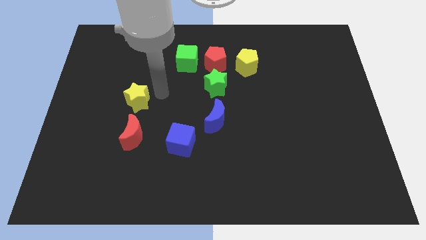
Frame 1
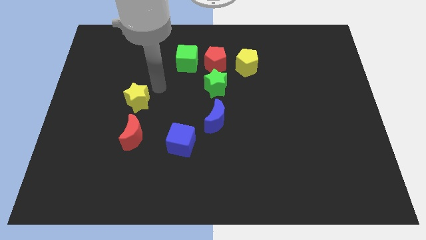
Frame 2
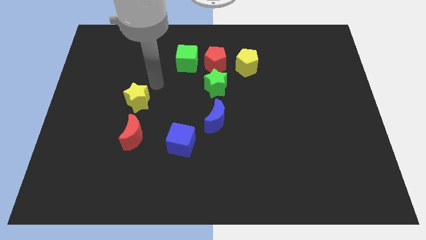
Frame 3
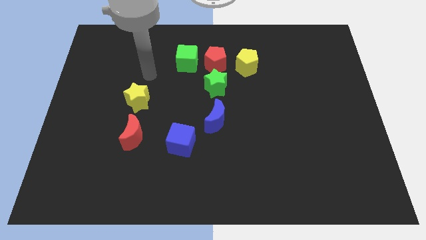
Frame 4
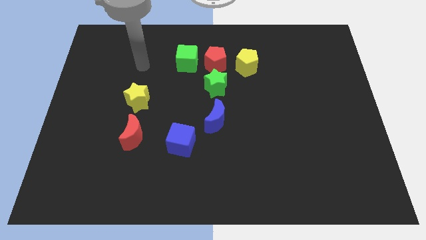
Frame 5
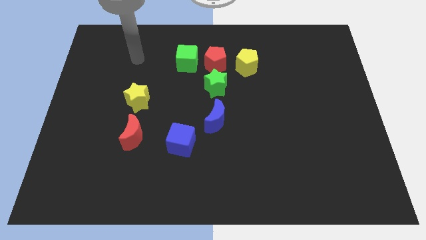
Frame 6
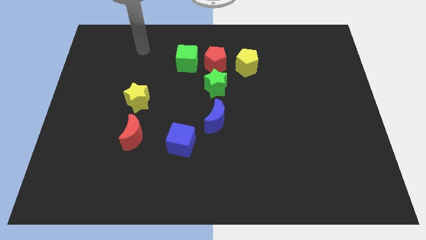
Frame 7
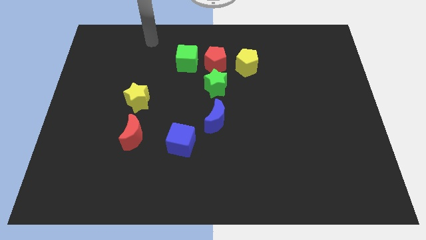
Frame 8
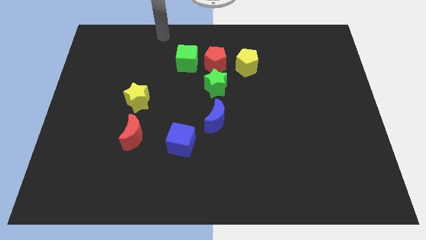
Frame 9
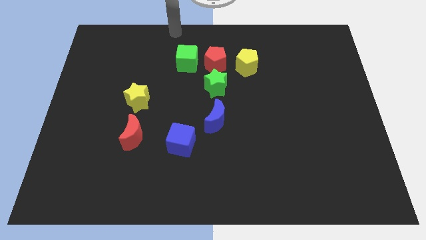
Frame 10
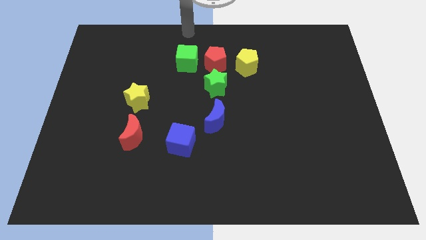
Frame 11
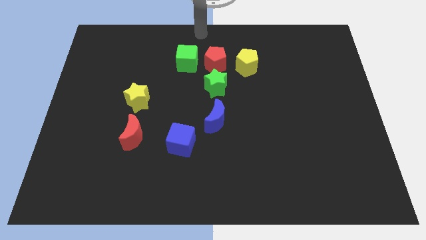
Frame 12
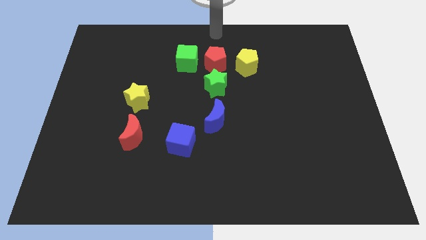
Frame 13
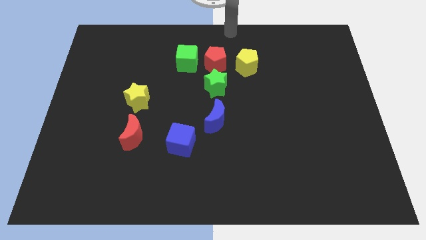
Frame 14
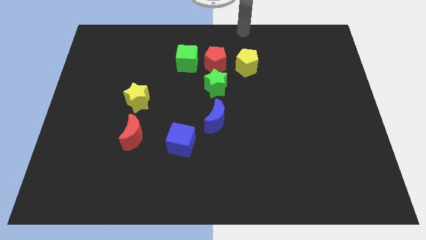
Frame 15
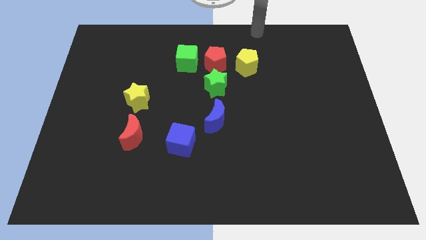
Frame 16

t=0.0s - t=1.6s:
move your arm to the top of yellow pentagon

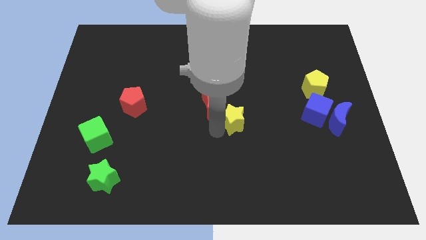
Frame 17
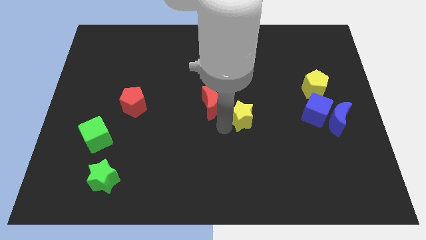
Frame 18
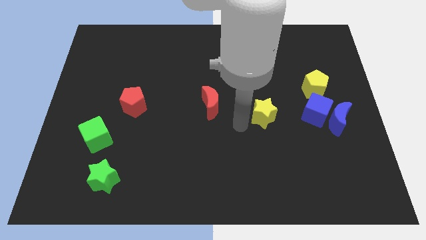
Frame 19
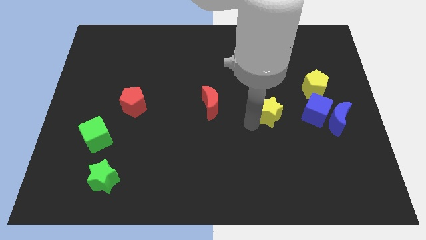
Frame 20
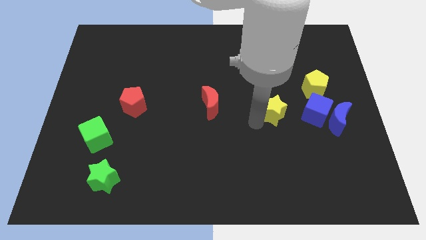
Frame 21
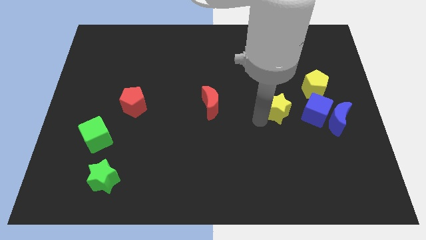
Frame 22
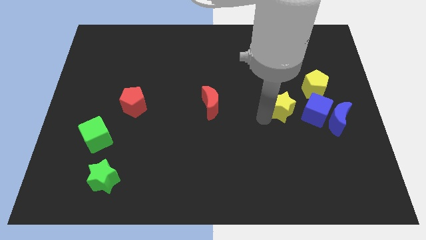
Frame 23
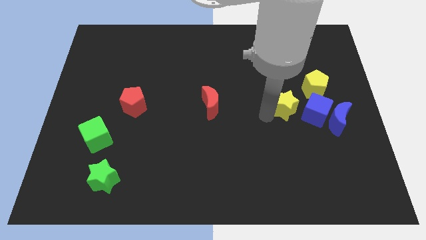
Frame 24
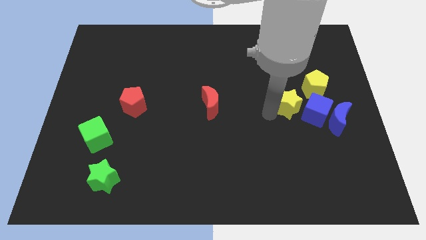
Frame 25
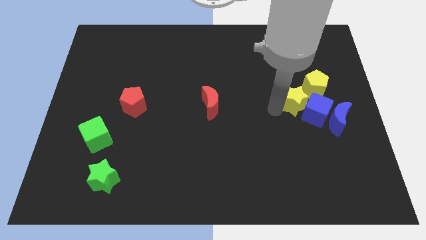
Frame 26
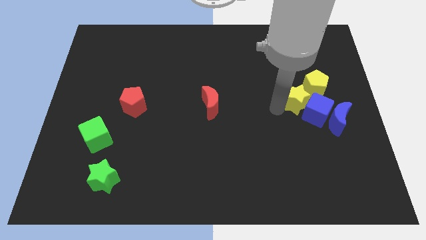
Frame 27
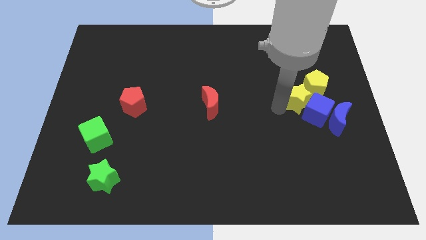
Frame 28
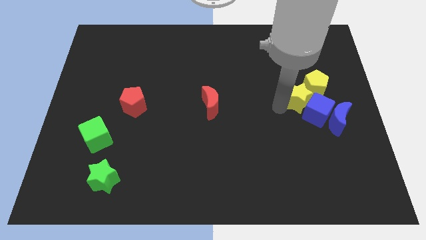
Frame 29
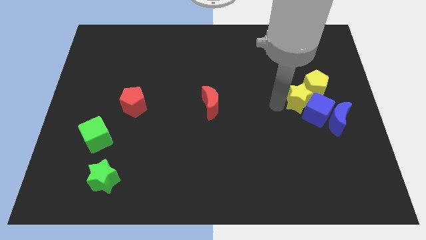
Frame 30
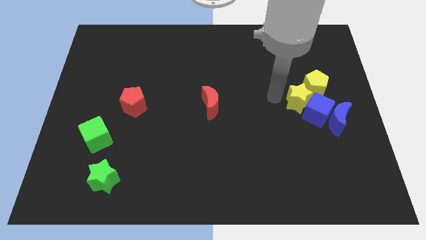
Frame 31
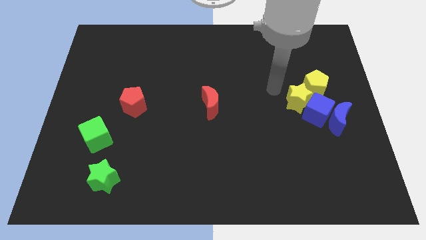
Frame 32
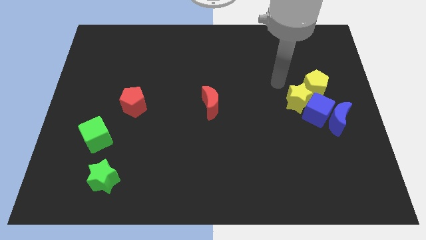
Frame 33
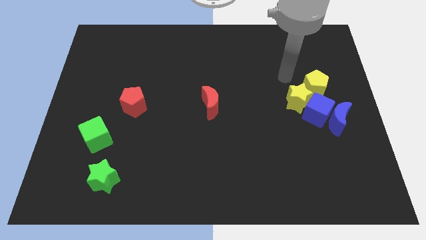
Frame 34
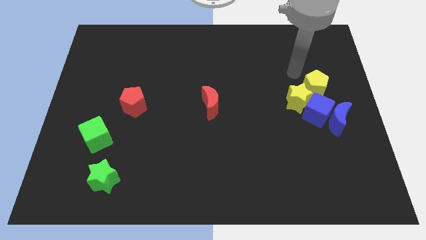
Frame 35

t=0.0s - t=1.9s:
move the yellow star to the top left of blue cube

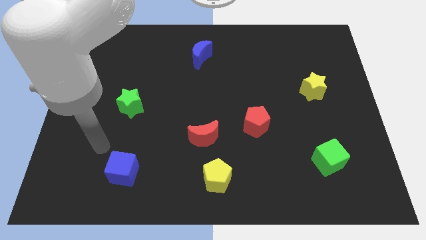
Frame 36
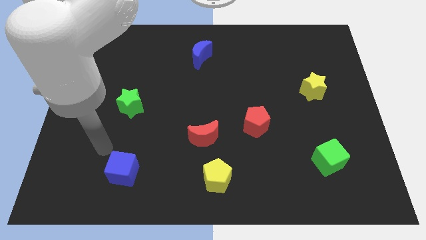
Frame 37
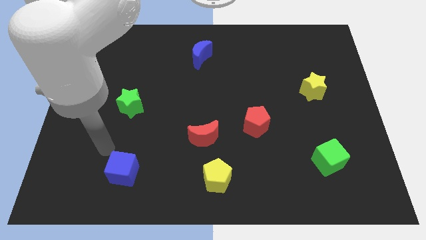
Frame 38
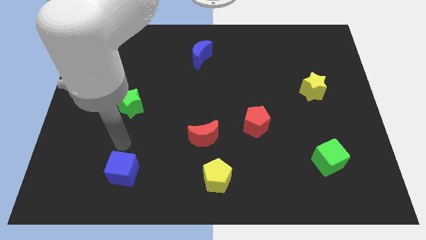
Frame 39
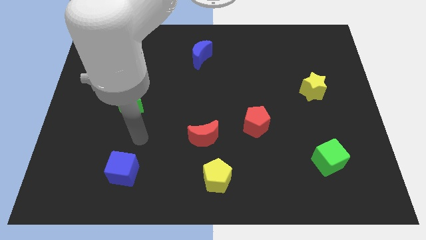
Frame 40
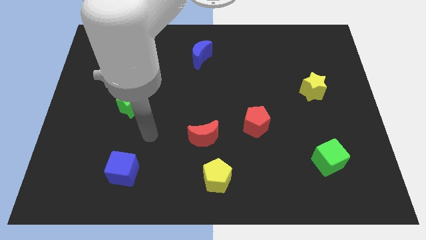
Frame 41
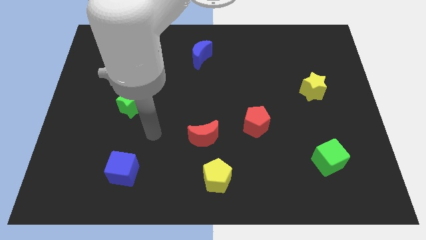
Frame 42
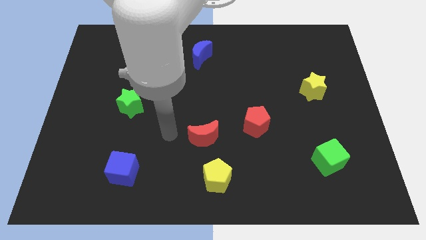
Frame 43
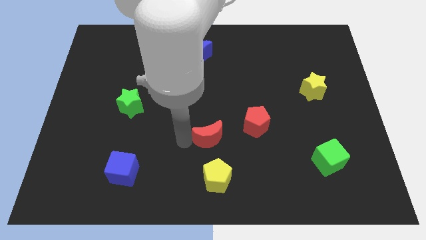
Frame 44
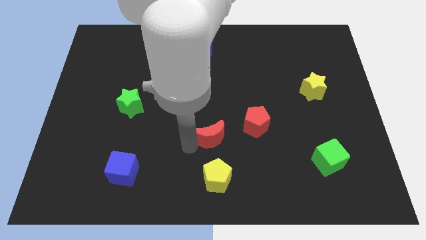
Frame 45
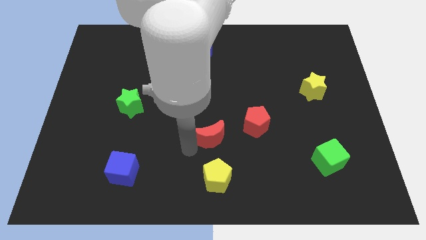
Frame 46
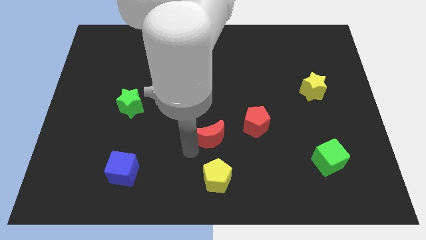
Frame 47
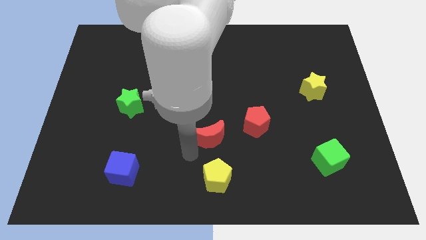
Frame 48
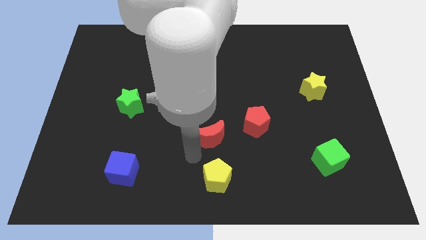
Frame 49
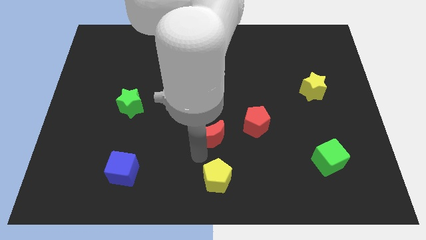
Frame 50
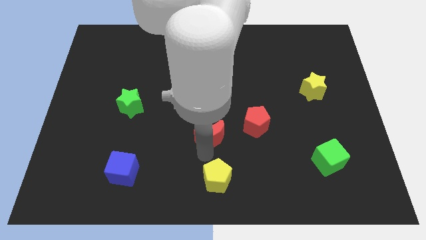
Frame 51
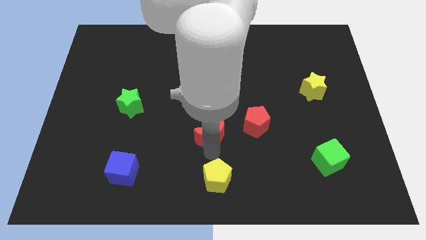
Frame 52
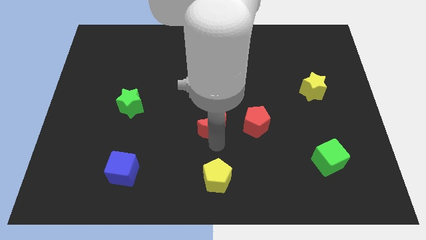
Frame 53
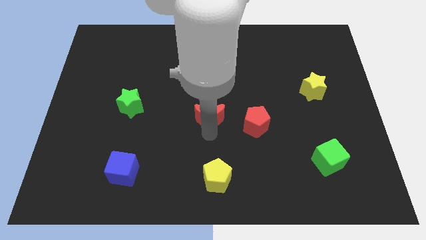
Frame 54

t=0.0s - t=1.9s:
push the red crescent slightly upwards to the centre of the crescent

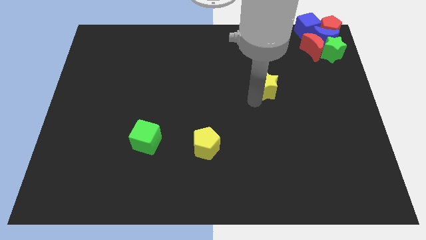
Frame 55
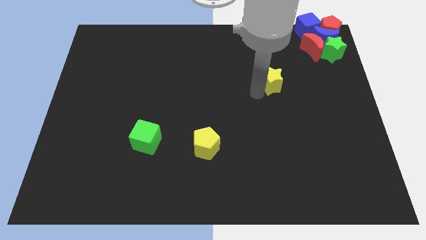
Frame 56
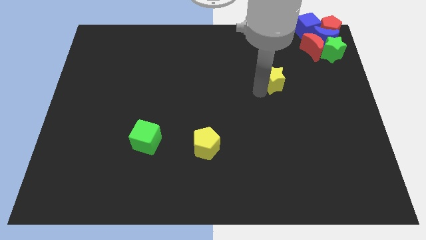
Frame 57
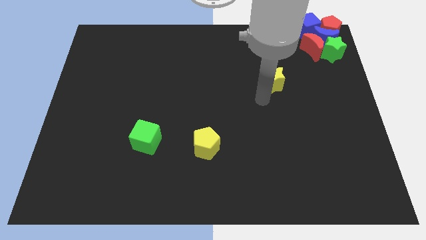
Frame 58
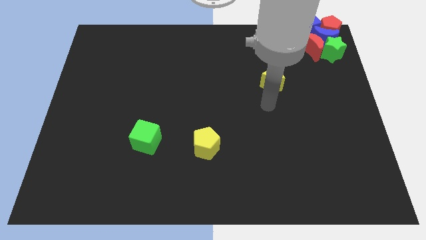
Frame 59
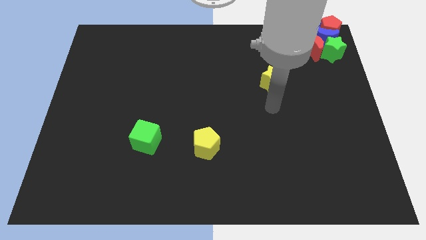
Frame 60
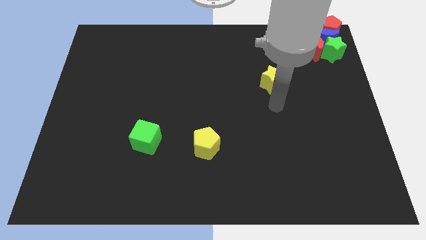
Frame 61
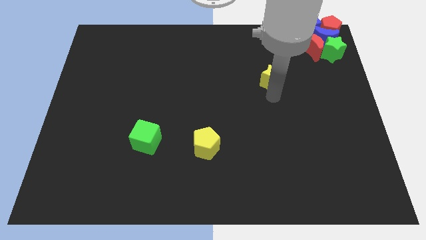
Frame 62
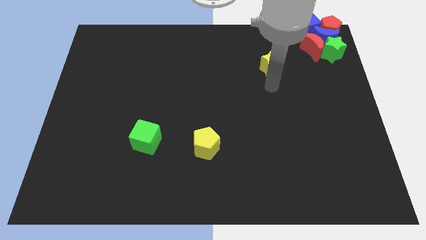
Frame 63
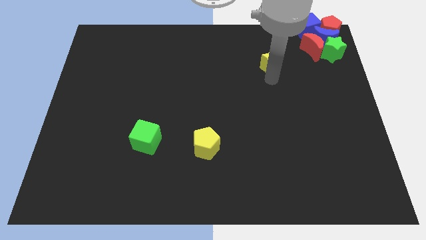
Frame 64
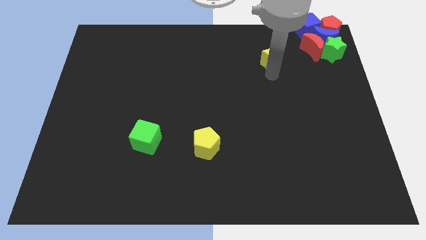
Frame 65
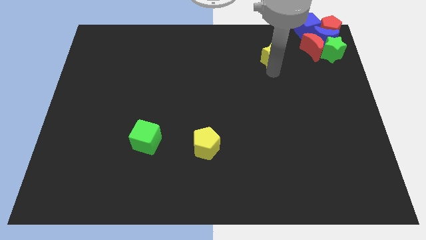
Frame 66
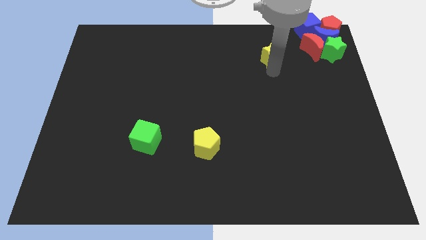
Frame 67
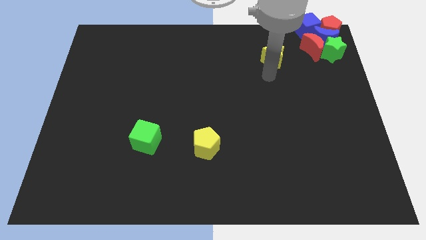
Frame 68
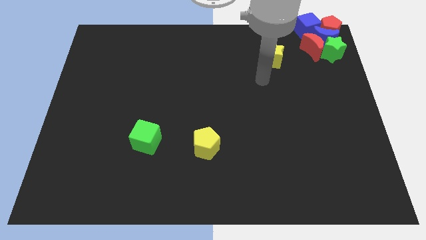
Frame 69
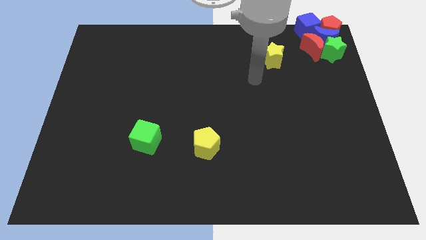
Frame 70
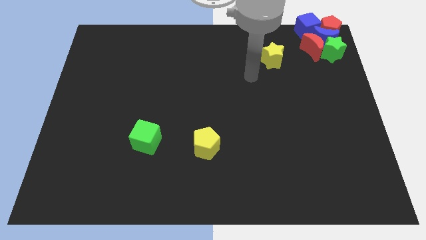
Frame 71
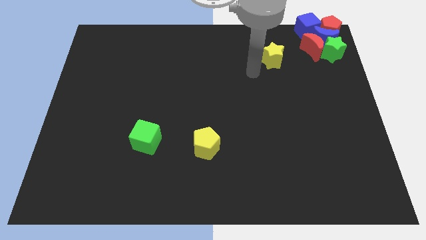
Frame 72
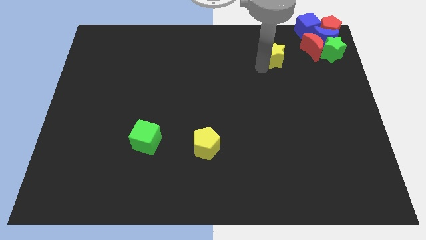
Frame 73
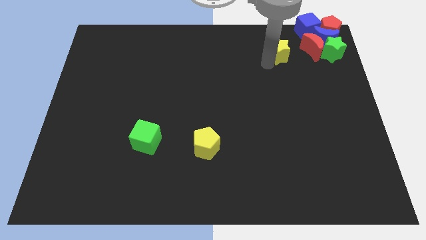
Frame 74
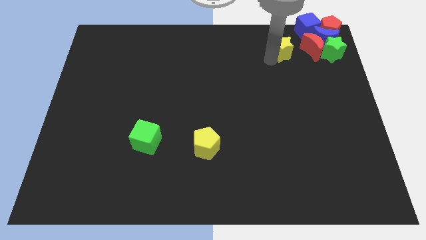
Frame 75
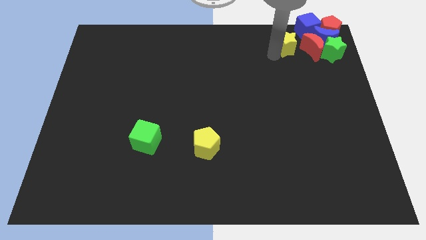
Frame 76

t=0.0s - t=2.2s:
push the yellow star to the left of the red crescent

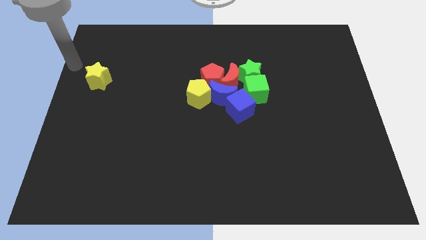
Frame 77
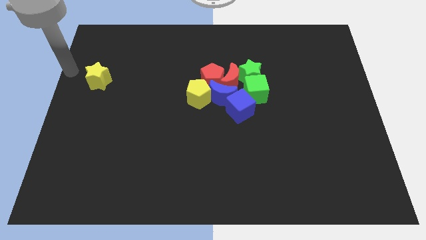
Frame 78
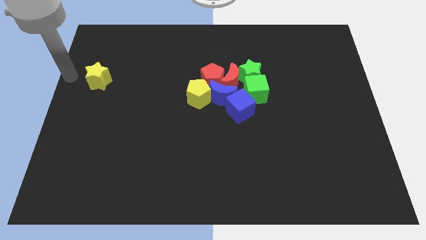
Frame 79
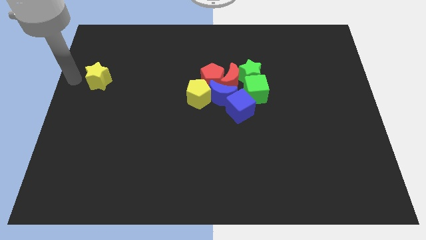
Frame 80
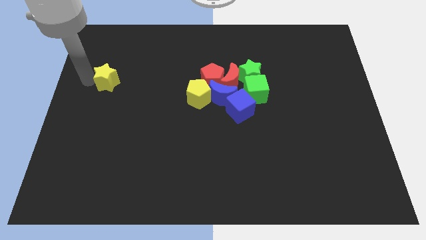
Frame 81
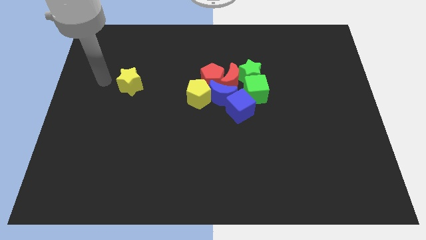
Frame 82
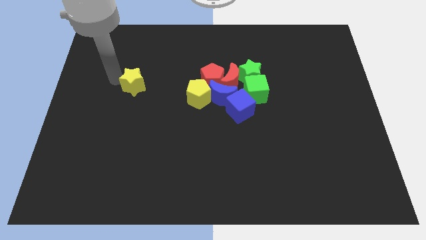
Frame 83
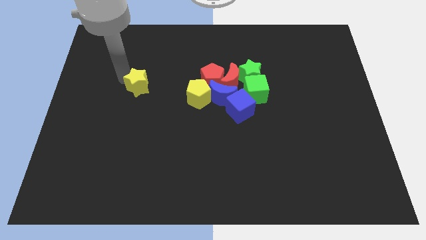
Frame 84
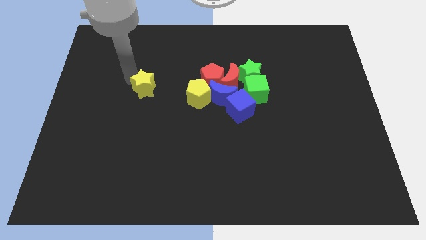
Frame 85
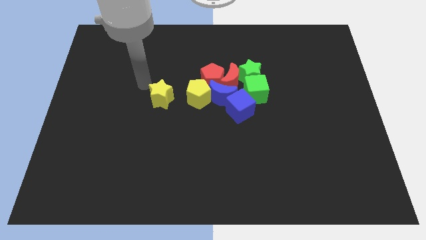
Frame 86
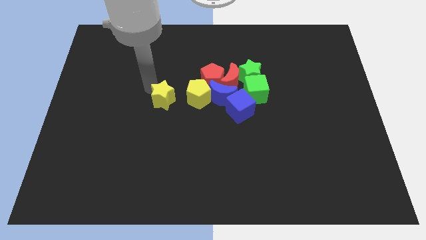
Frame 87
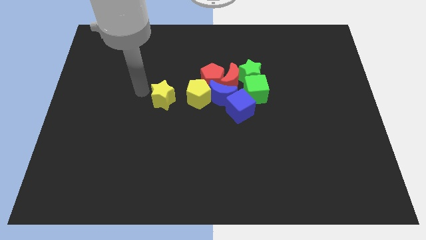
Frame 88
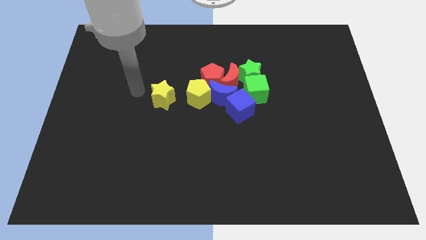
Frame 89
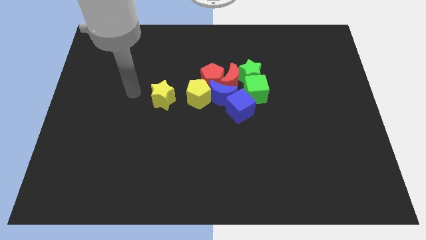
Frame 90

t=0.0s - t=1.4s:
place the yellow star to the left of the yellow pentagon
